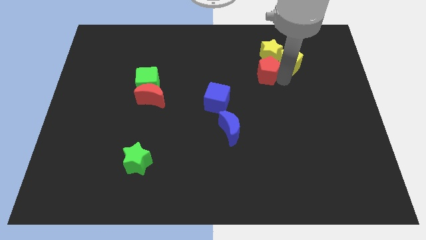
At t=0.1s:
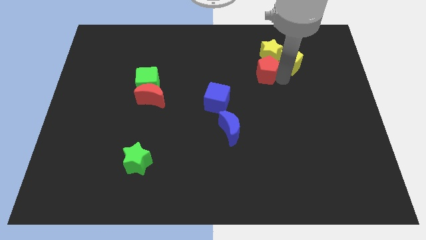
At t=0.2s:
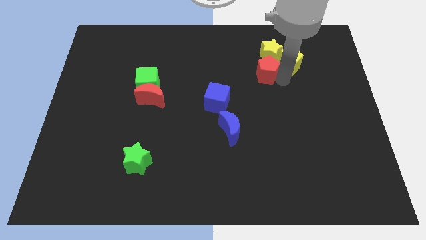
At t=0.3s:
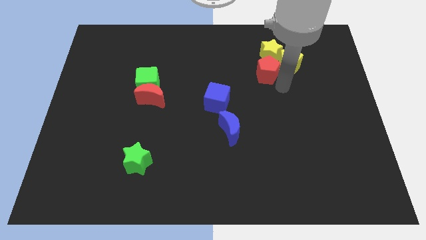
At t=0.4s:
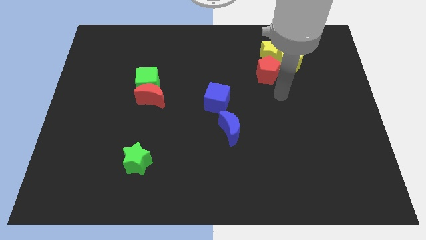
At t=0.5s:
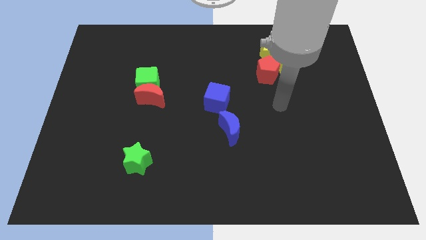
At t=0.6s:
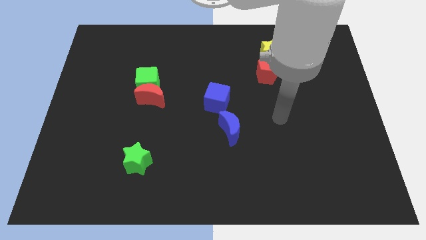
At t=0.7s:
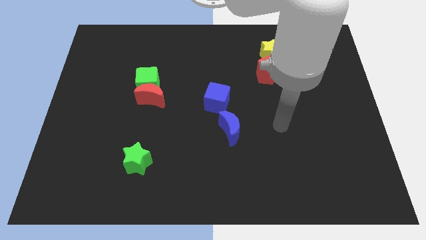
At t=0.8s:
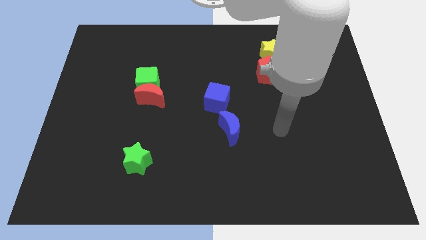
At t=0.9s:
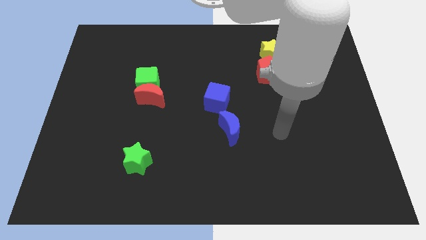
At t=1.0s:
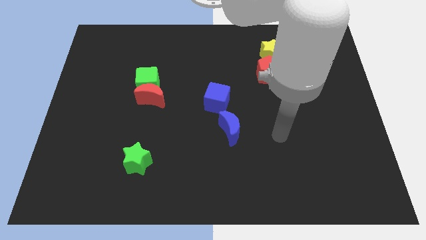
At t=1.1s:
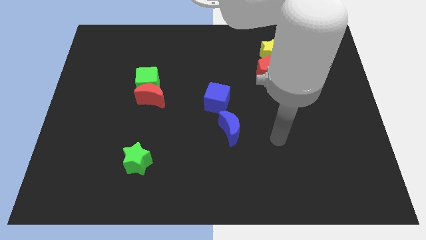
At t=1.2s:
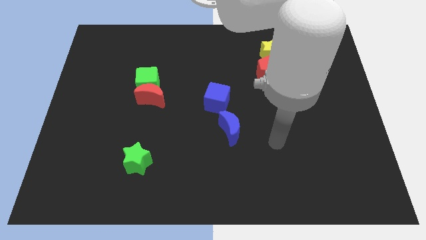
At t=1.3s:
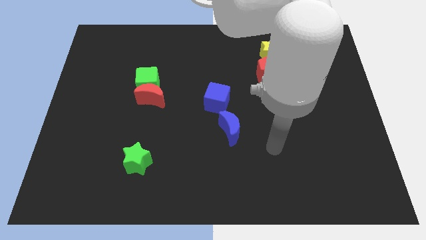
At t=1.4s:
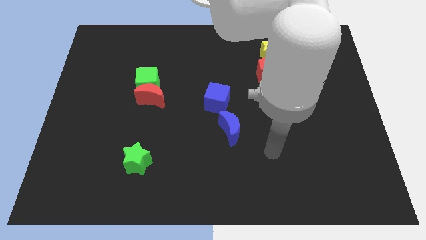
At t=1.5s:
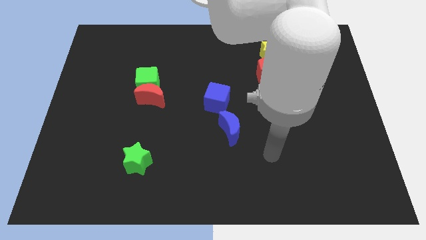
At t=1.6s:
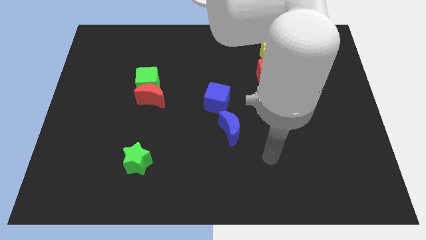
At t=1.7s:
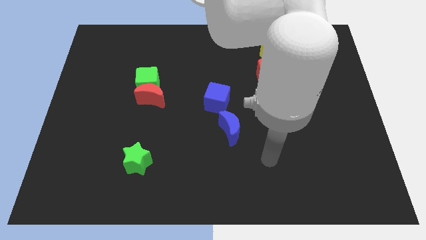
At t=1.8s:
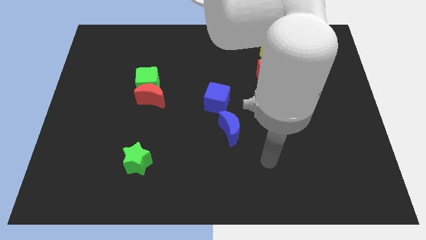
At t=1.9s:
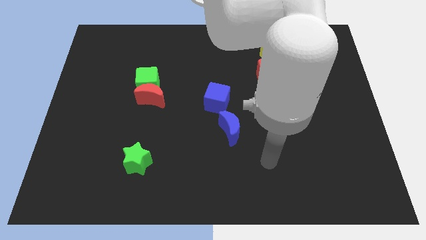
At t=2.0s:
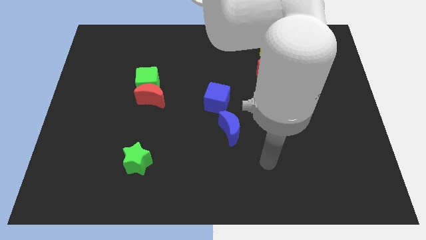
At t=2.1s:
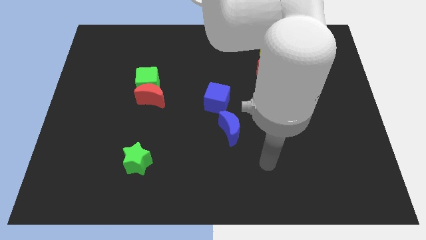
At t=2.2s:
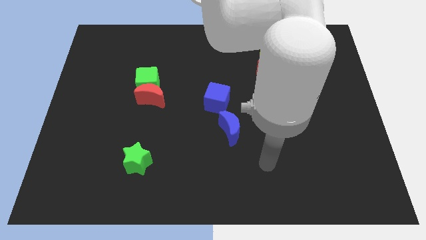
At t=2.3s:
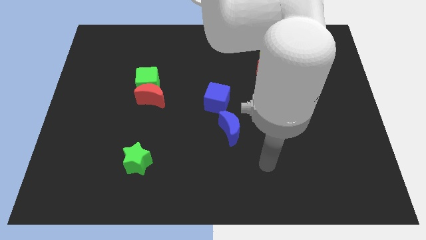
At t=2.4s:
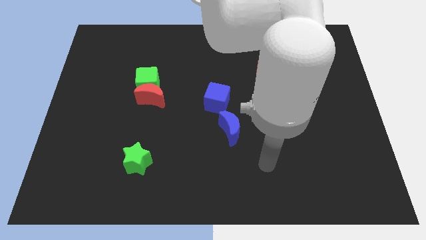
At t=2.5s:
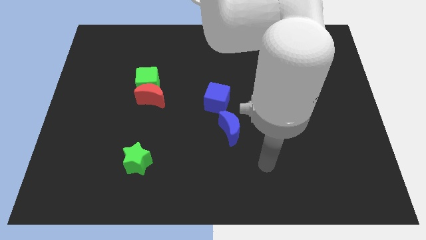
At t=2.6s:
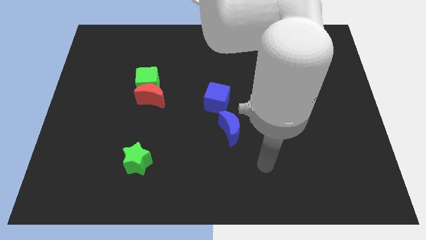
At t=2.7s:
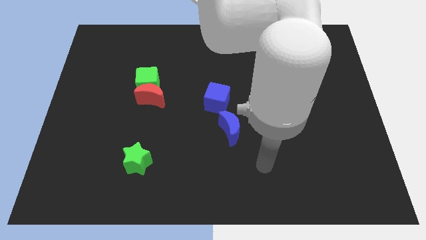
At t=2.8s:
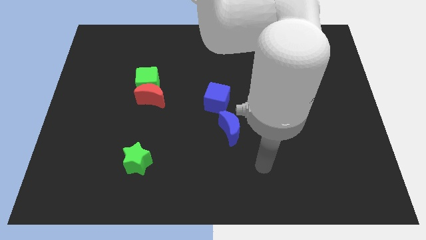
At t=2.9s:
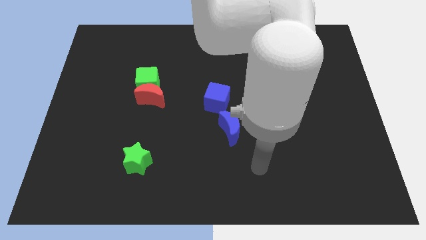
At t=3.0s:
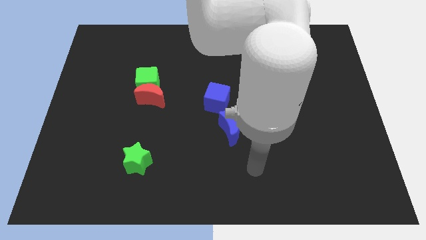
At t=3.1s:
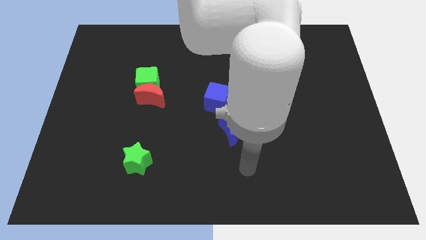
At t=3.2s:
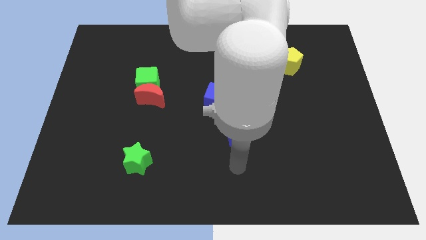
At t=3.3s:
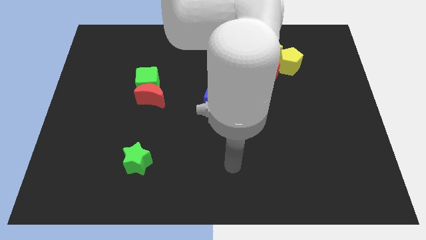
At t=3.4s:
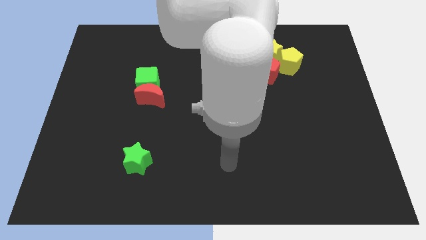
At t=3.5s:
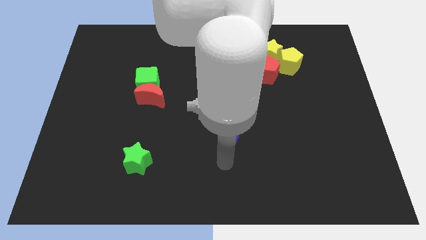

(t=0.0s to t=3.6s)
move your arm down and to the left

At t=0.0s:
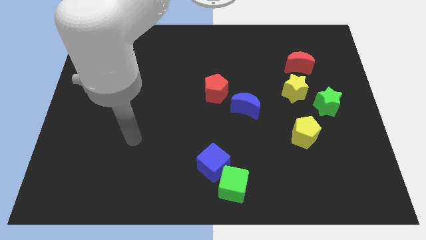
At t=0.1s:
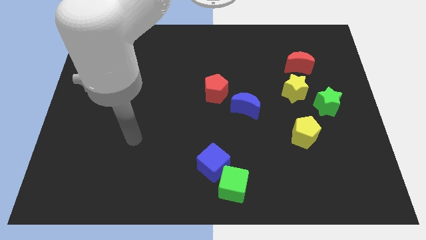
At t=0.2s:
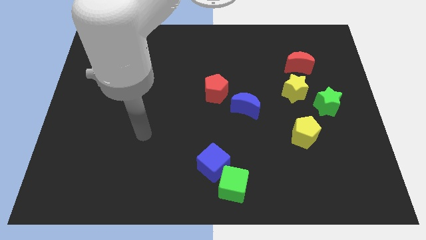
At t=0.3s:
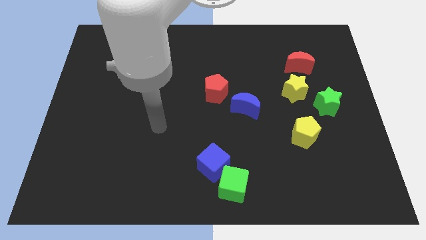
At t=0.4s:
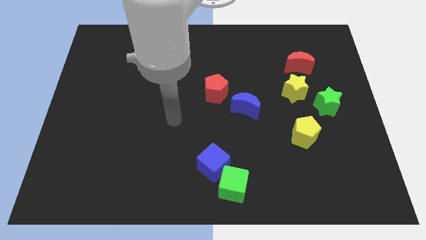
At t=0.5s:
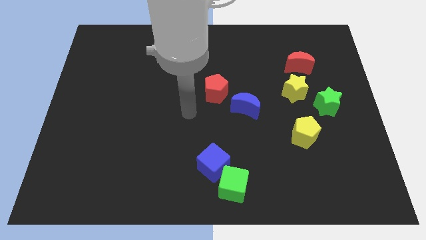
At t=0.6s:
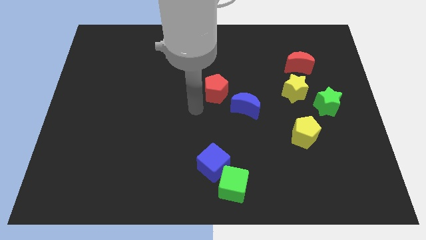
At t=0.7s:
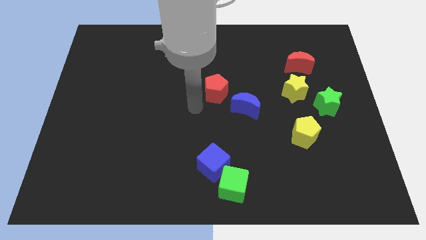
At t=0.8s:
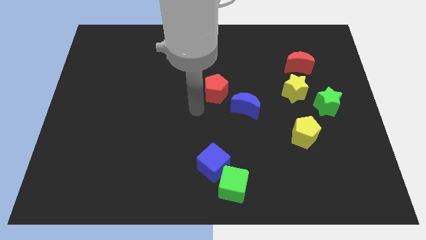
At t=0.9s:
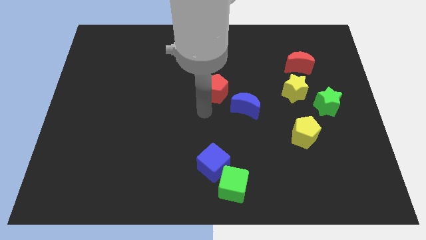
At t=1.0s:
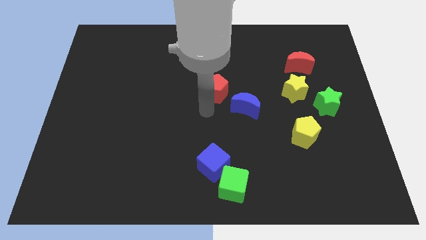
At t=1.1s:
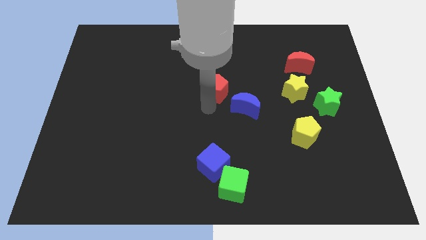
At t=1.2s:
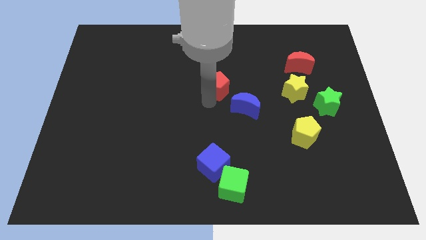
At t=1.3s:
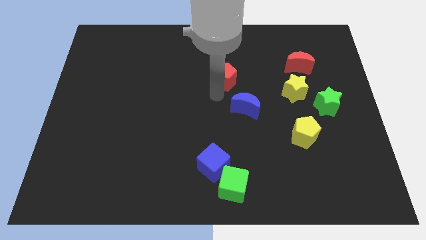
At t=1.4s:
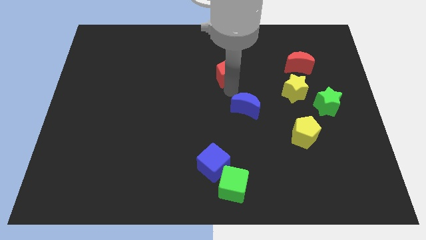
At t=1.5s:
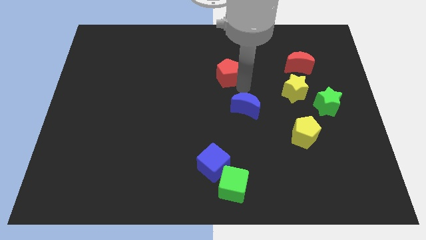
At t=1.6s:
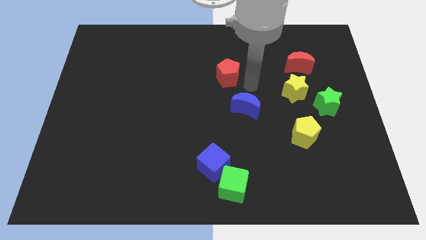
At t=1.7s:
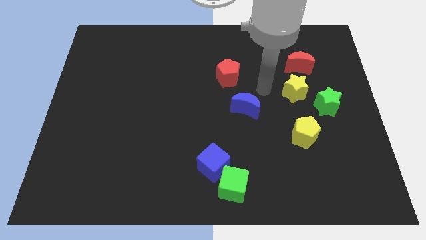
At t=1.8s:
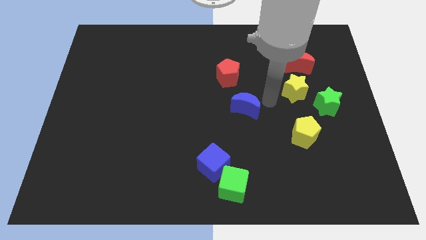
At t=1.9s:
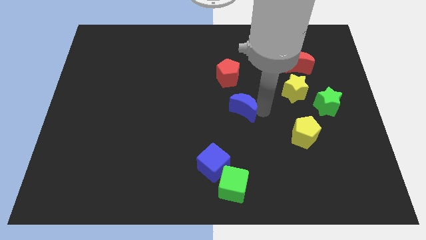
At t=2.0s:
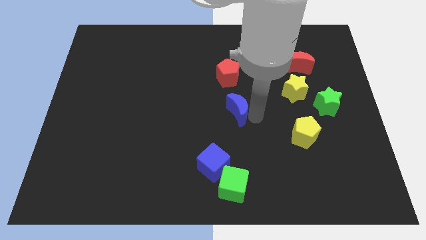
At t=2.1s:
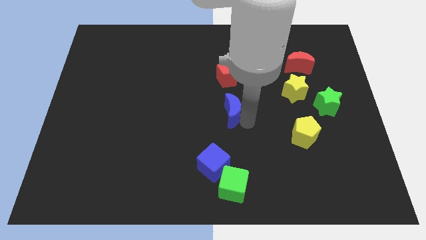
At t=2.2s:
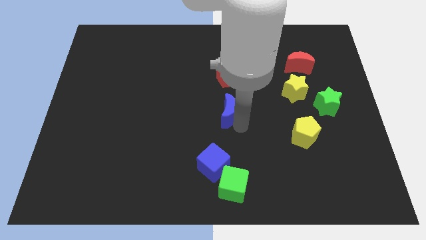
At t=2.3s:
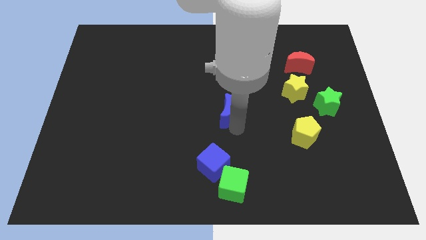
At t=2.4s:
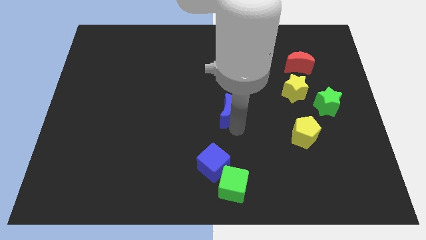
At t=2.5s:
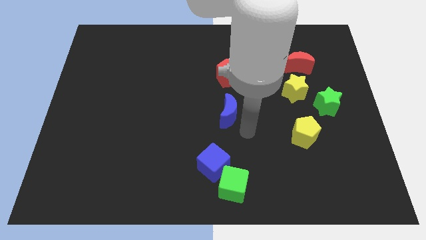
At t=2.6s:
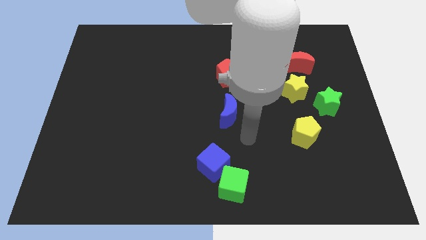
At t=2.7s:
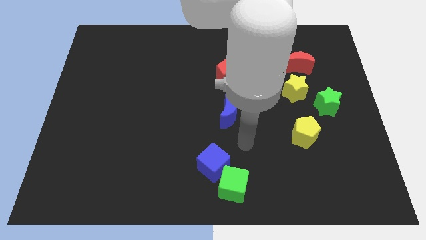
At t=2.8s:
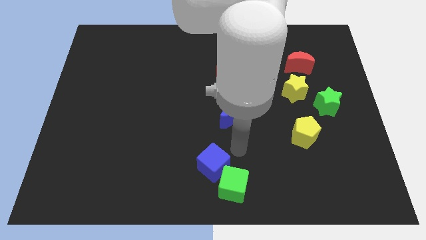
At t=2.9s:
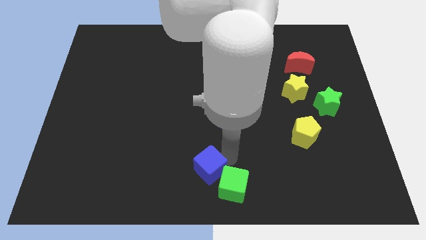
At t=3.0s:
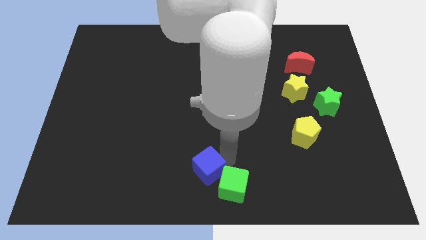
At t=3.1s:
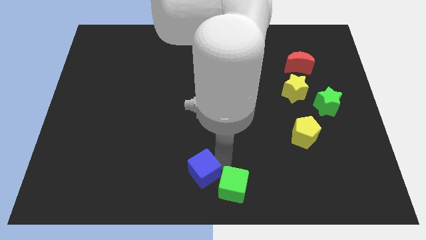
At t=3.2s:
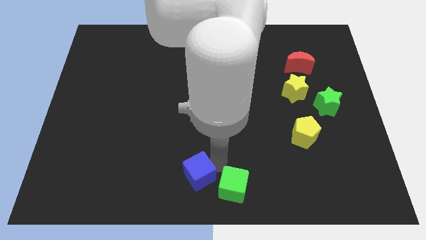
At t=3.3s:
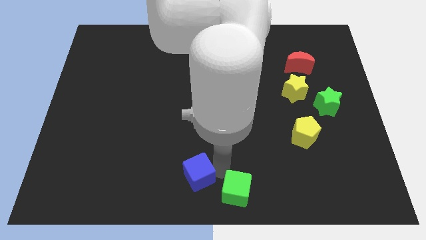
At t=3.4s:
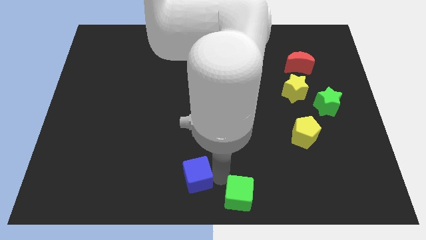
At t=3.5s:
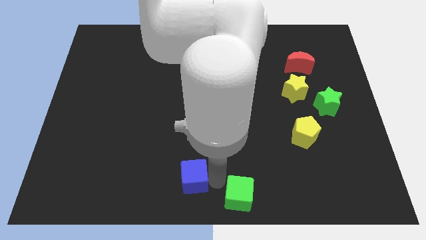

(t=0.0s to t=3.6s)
move the red pentagon above the blue moon

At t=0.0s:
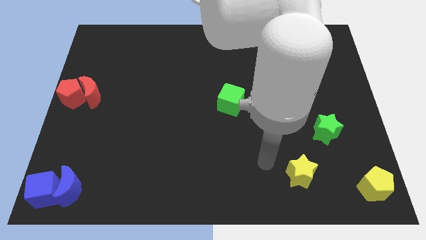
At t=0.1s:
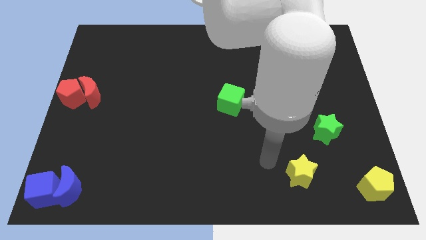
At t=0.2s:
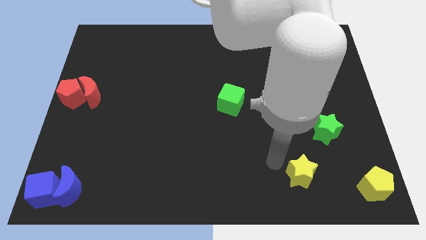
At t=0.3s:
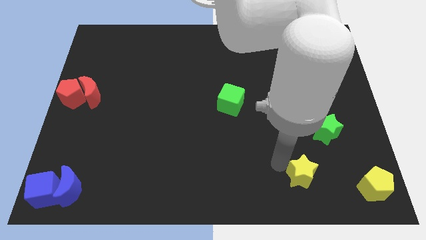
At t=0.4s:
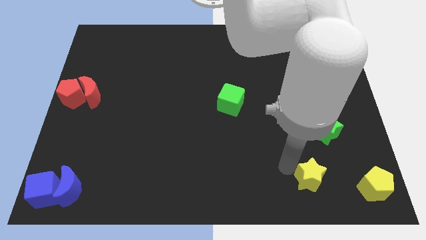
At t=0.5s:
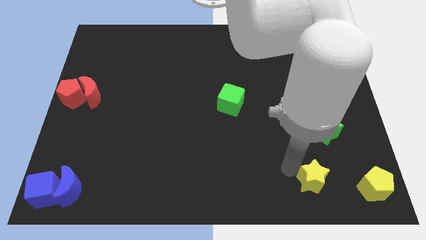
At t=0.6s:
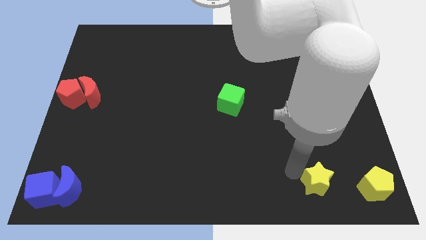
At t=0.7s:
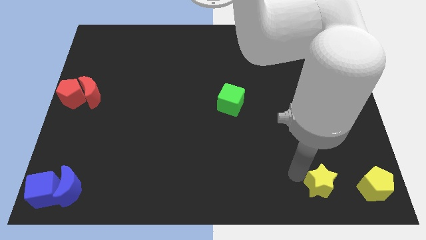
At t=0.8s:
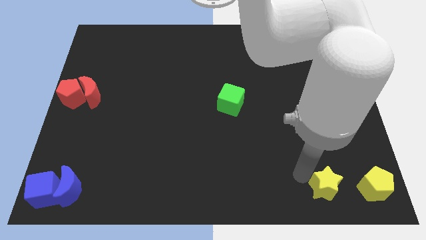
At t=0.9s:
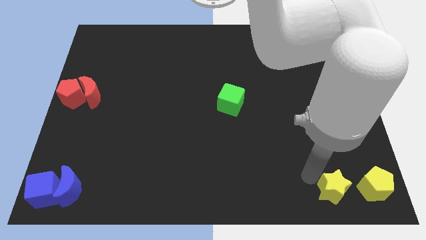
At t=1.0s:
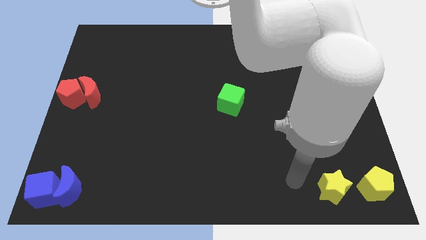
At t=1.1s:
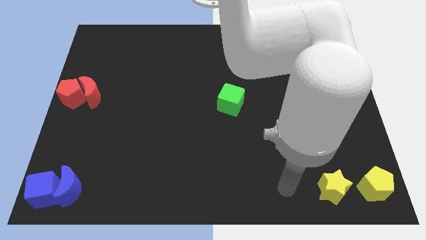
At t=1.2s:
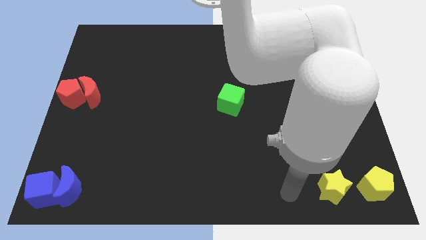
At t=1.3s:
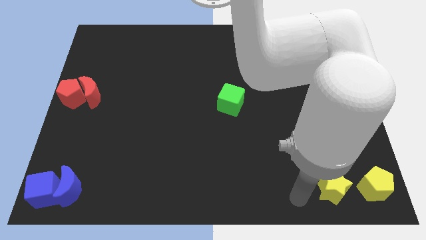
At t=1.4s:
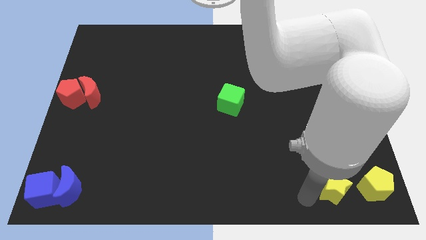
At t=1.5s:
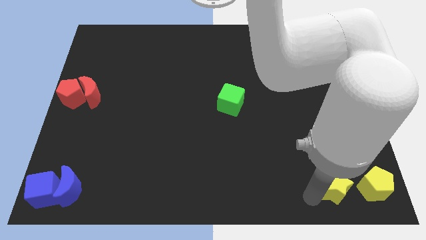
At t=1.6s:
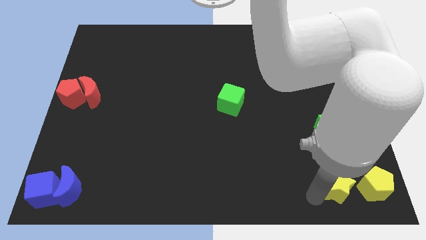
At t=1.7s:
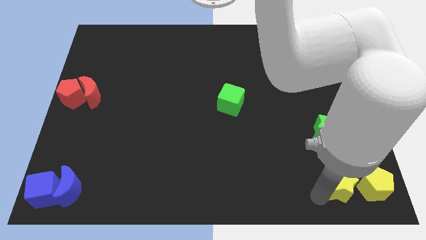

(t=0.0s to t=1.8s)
move the yellow star to left of the yellow star

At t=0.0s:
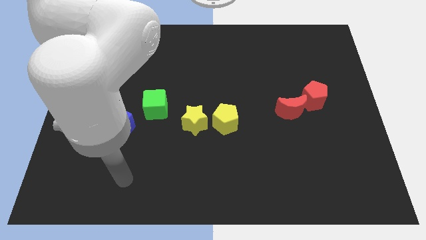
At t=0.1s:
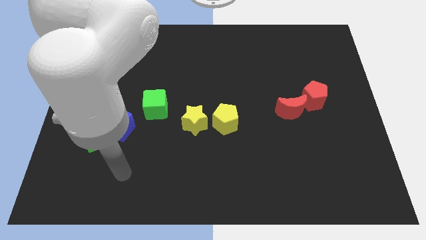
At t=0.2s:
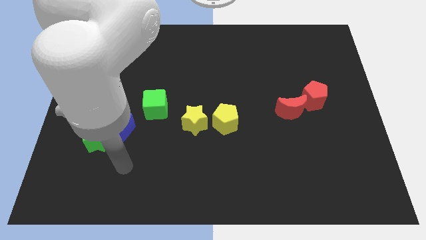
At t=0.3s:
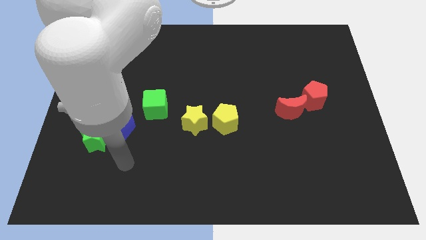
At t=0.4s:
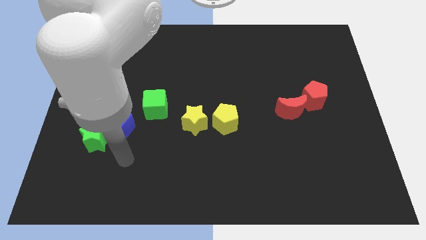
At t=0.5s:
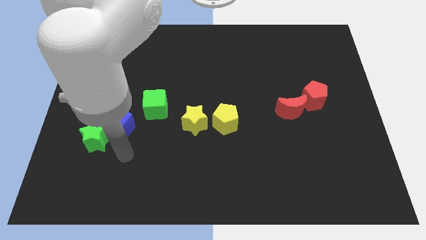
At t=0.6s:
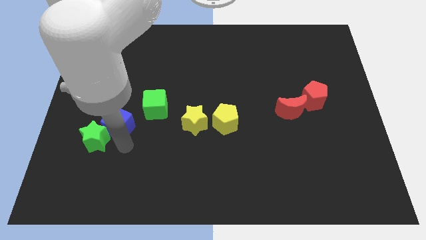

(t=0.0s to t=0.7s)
place your arm below blue cube
